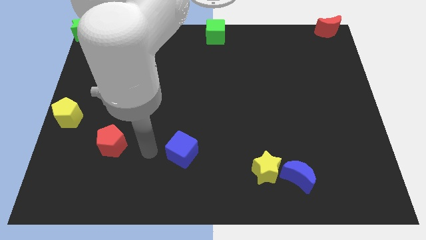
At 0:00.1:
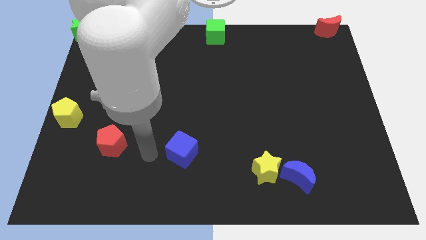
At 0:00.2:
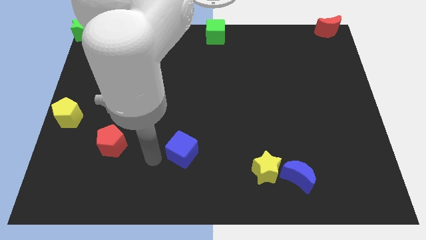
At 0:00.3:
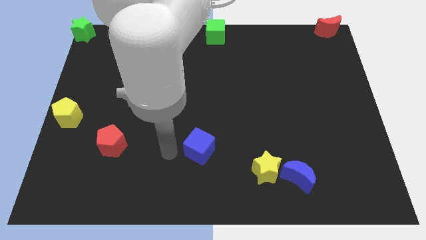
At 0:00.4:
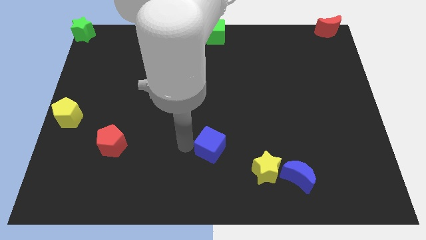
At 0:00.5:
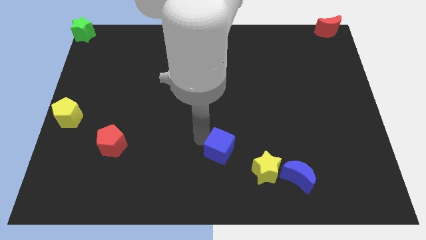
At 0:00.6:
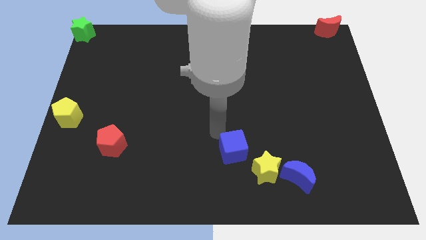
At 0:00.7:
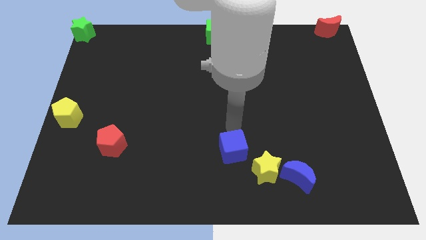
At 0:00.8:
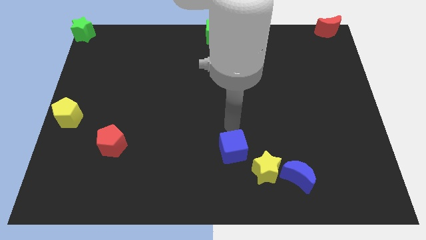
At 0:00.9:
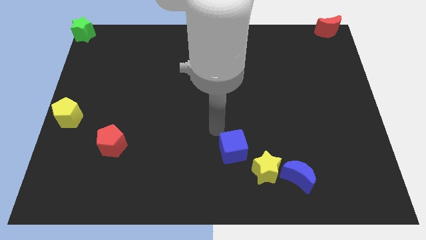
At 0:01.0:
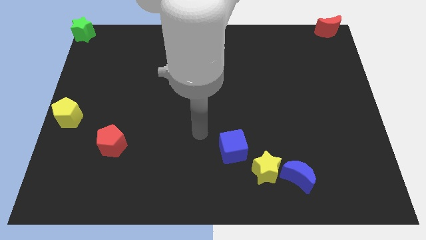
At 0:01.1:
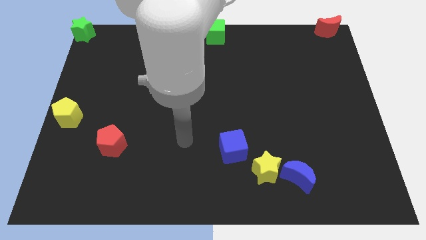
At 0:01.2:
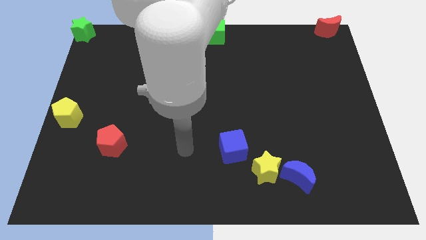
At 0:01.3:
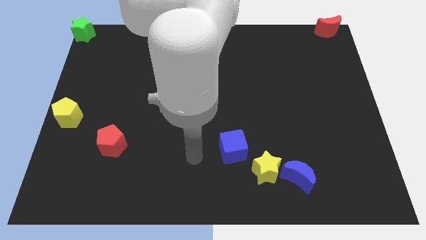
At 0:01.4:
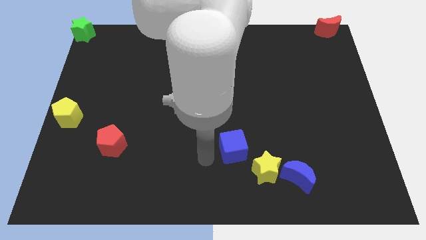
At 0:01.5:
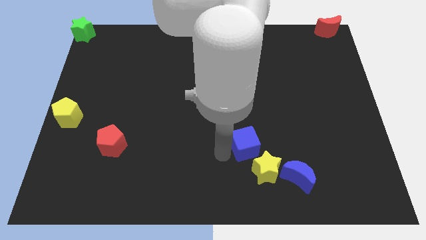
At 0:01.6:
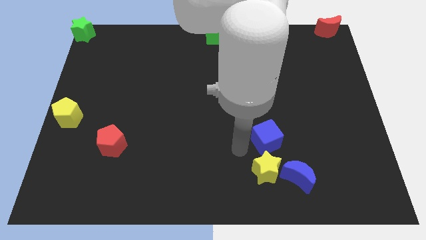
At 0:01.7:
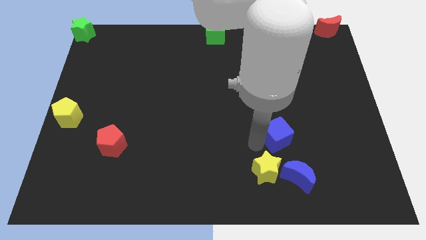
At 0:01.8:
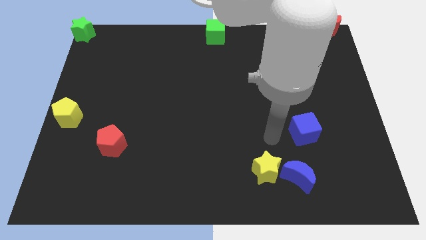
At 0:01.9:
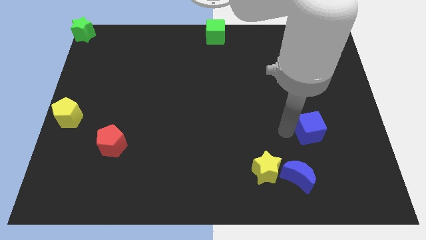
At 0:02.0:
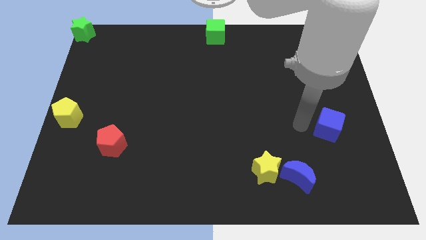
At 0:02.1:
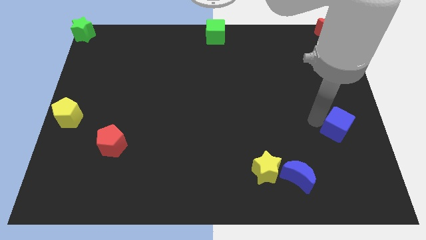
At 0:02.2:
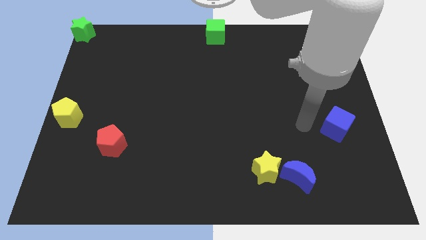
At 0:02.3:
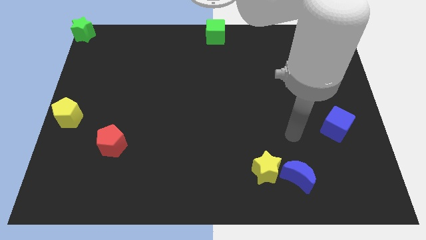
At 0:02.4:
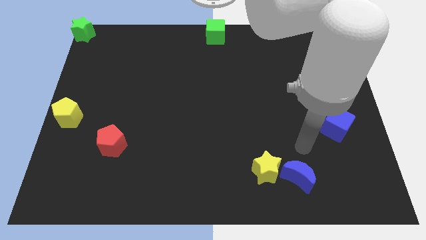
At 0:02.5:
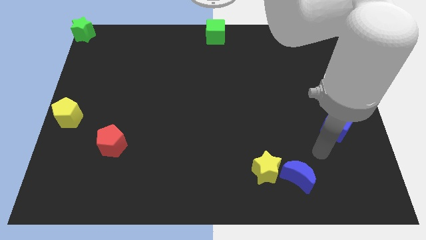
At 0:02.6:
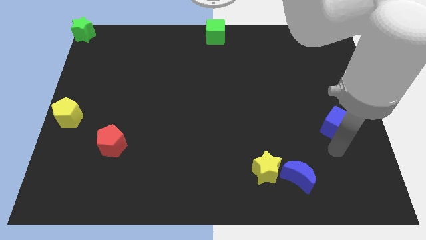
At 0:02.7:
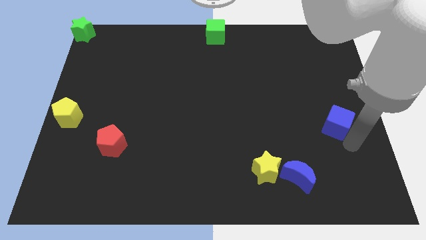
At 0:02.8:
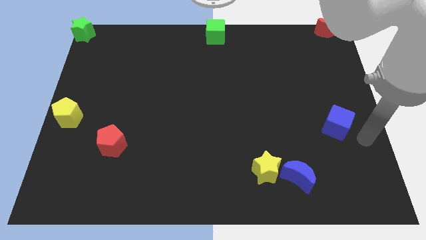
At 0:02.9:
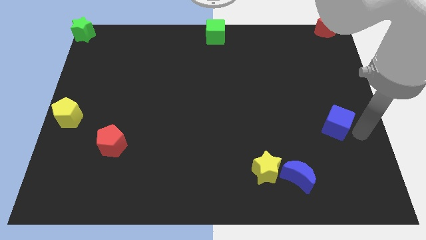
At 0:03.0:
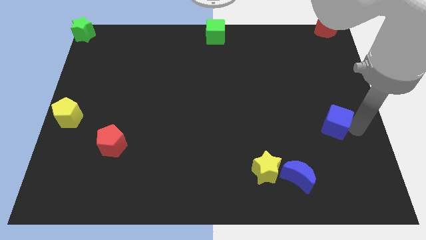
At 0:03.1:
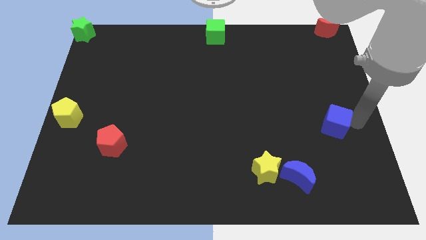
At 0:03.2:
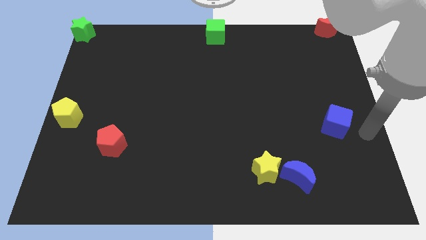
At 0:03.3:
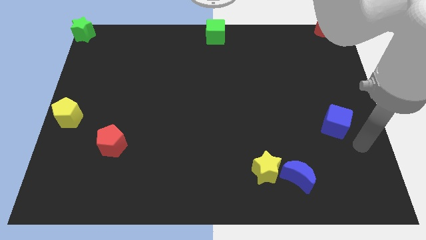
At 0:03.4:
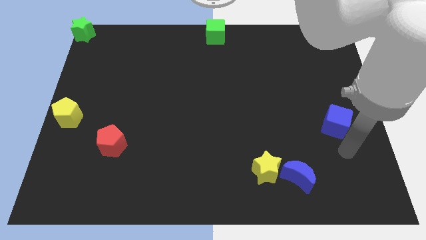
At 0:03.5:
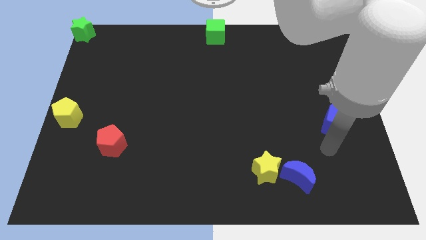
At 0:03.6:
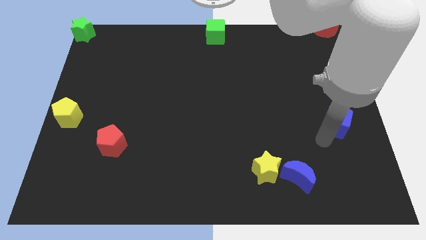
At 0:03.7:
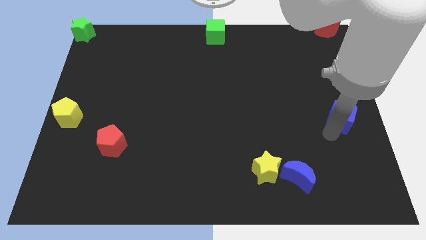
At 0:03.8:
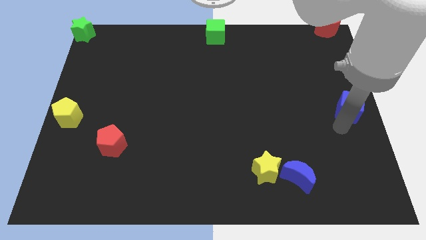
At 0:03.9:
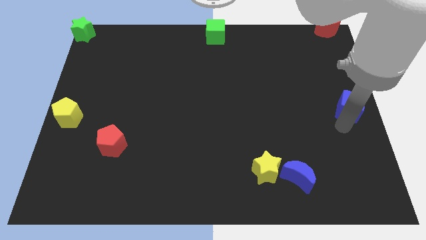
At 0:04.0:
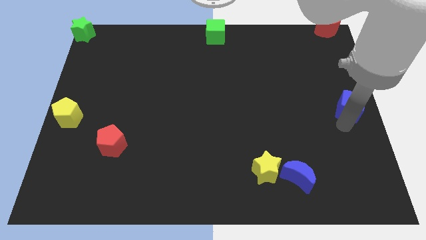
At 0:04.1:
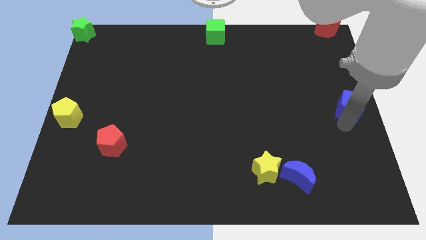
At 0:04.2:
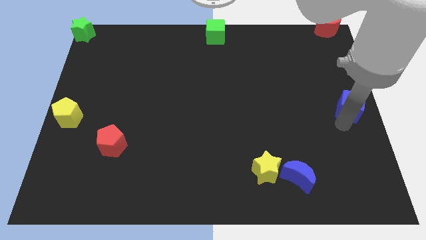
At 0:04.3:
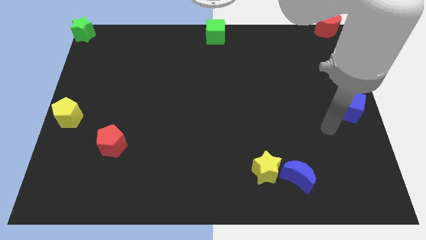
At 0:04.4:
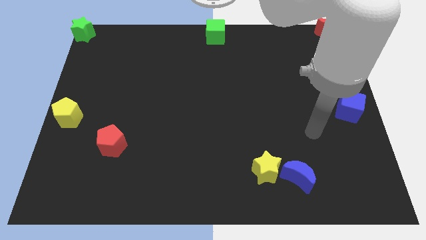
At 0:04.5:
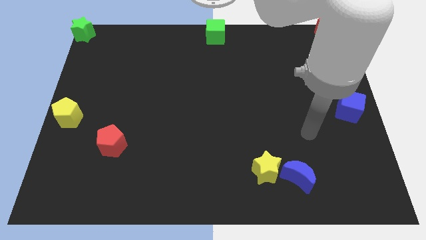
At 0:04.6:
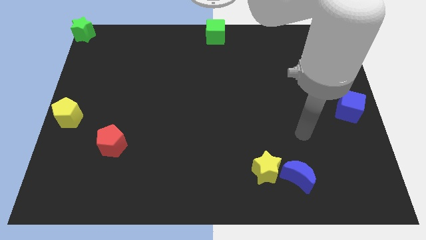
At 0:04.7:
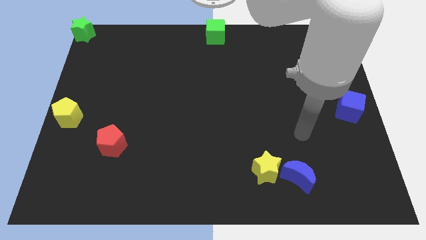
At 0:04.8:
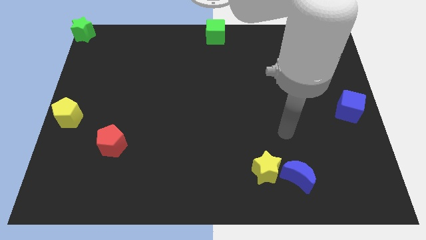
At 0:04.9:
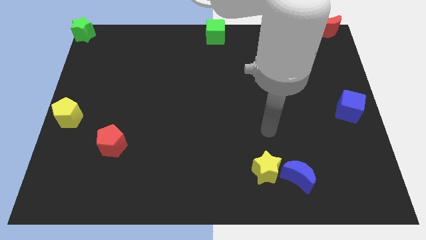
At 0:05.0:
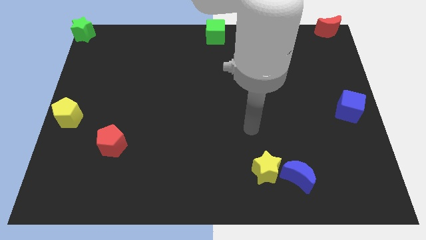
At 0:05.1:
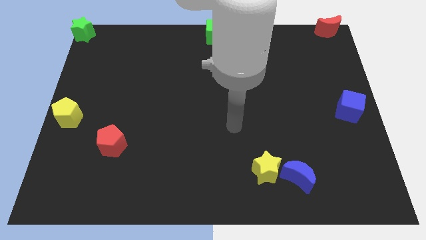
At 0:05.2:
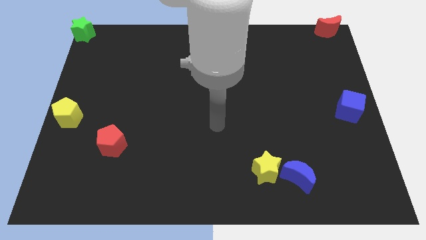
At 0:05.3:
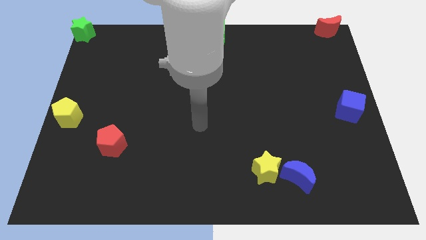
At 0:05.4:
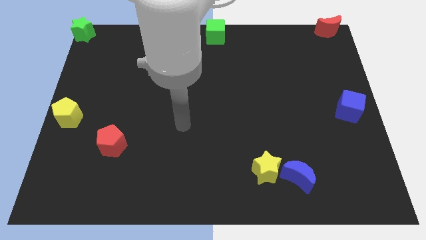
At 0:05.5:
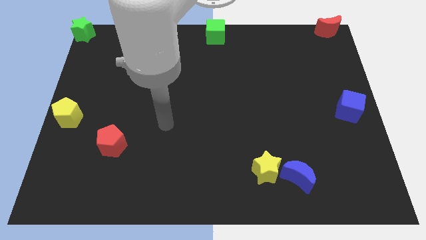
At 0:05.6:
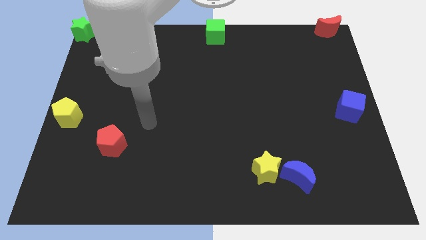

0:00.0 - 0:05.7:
place blue cube to the right center of the board

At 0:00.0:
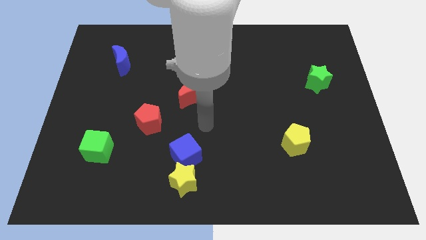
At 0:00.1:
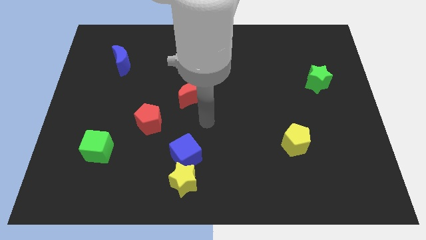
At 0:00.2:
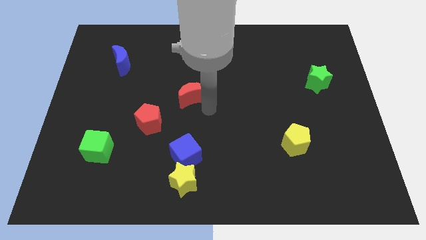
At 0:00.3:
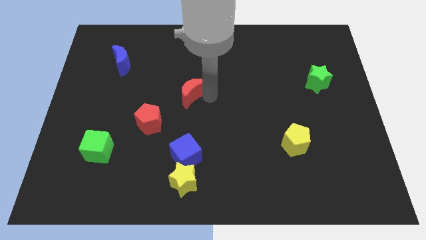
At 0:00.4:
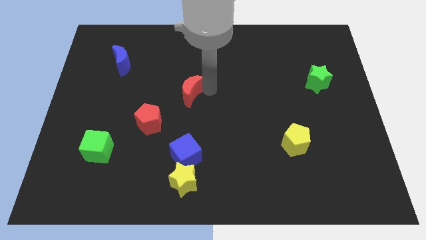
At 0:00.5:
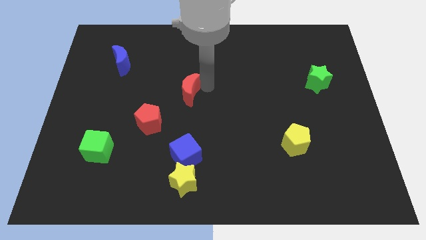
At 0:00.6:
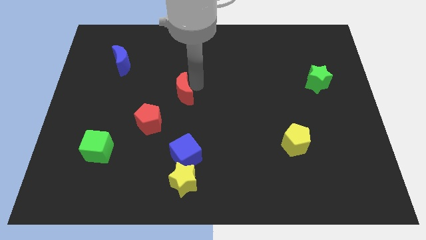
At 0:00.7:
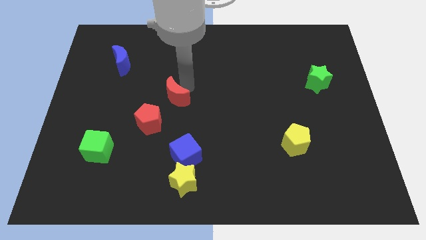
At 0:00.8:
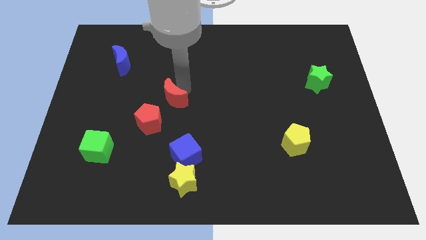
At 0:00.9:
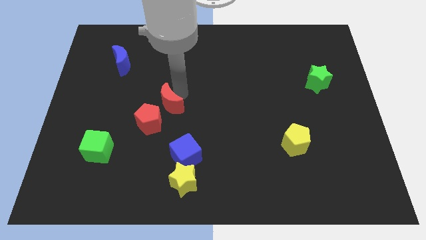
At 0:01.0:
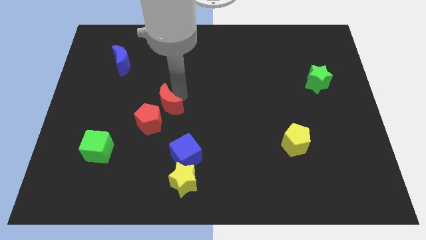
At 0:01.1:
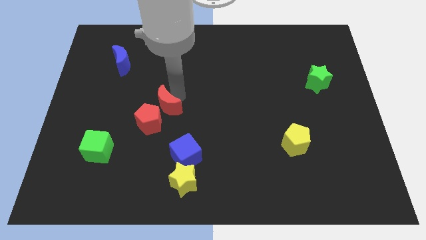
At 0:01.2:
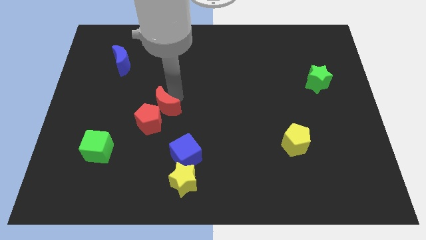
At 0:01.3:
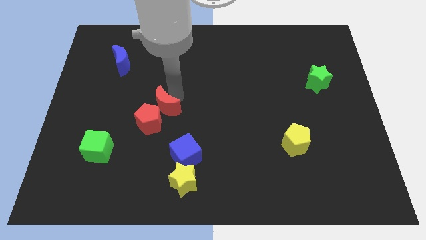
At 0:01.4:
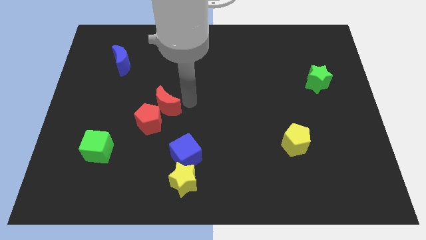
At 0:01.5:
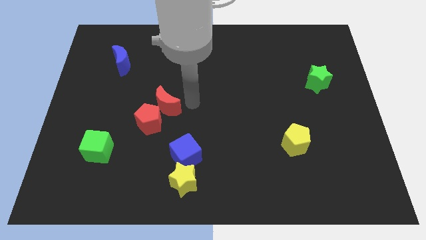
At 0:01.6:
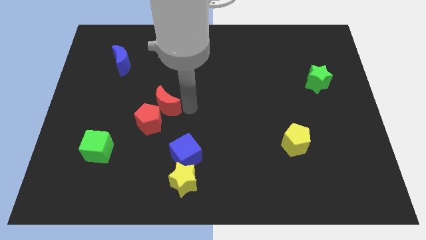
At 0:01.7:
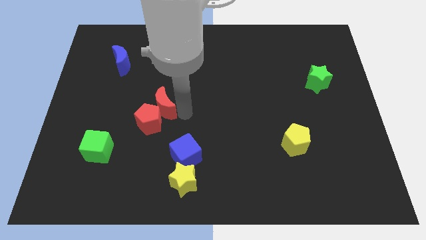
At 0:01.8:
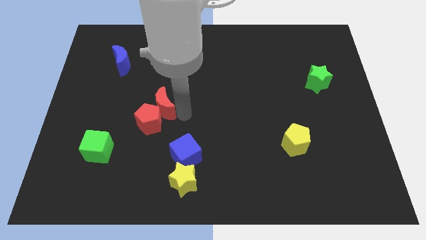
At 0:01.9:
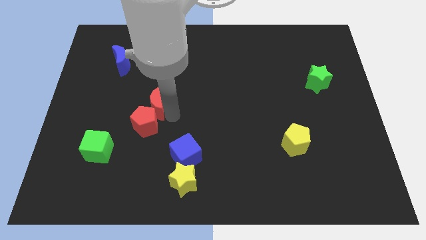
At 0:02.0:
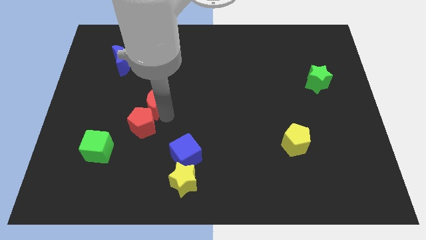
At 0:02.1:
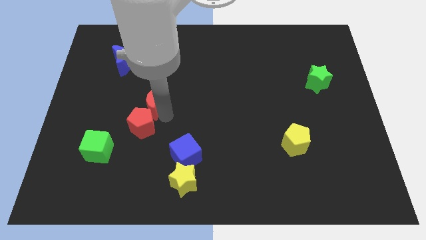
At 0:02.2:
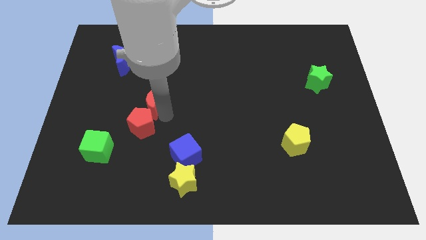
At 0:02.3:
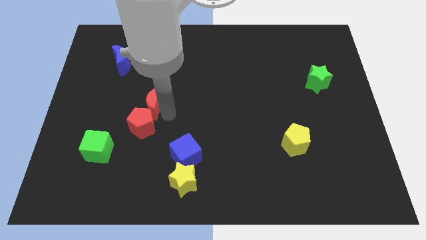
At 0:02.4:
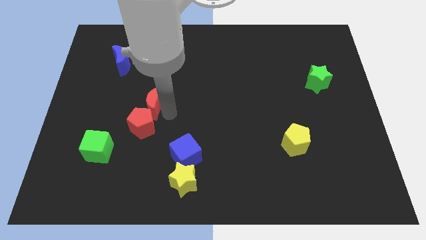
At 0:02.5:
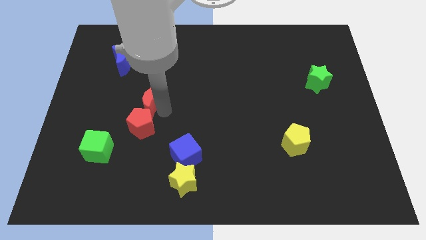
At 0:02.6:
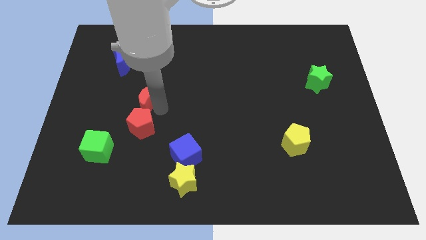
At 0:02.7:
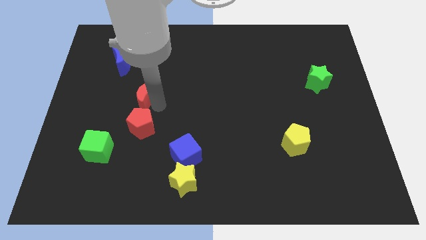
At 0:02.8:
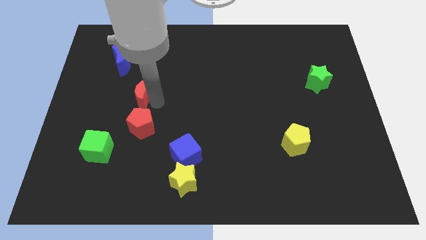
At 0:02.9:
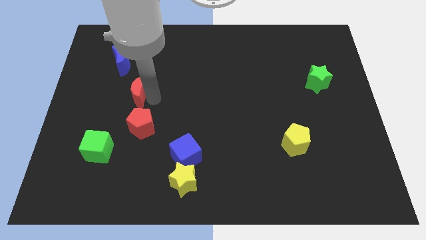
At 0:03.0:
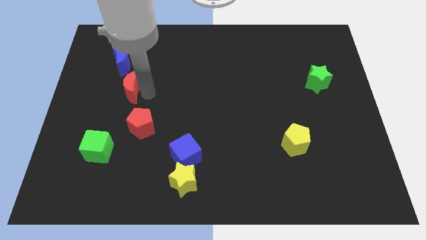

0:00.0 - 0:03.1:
place red moon on top of red pentagon
